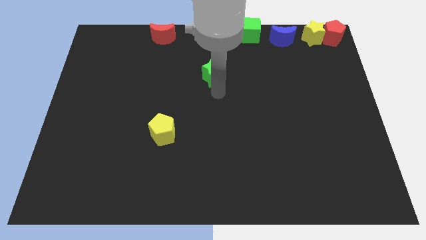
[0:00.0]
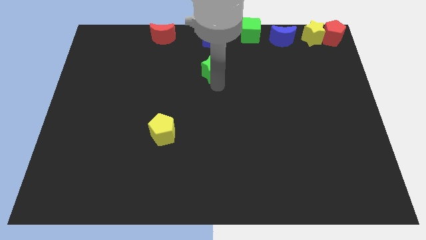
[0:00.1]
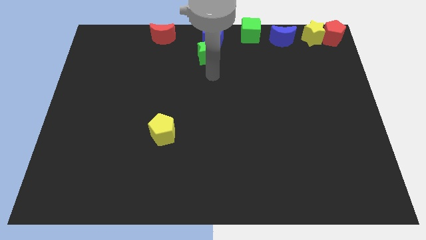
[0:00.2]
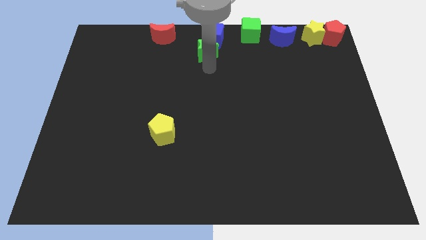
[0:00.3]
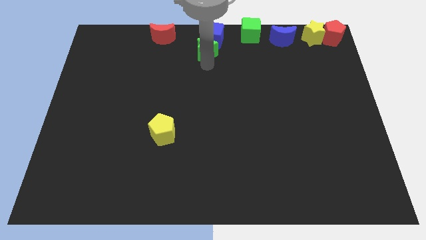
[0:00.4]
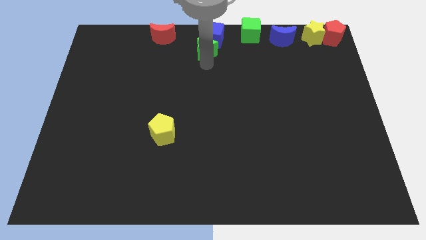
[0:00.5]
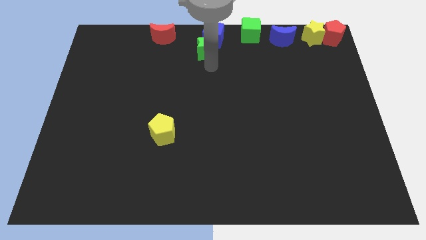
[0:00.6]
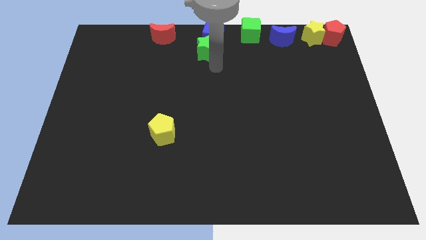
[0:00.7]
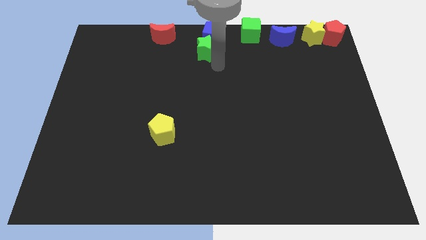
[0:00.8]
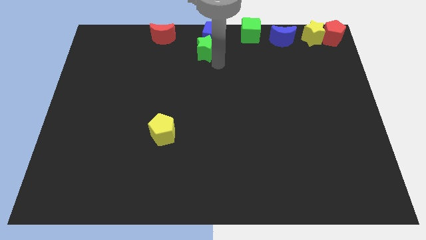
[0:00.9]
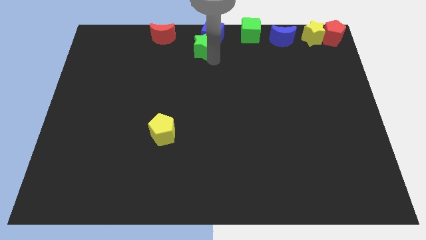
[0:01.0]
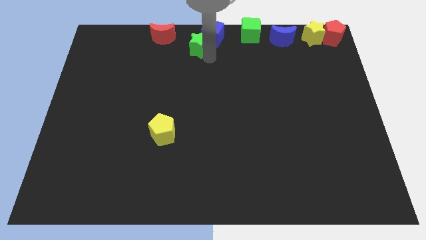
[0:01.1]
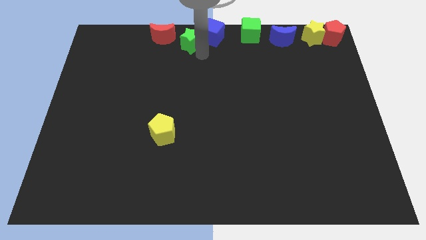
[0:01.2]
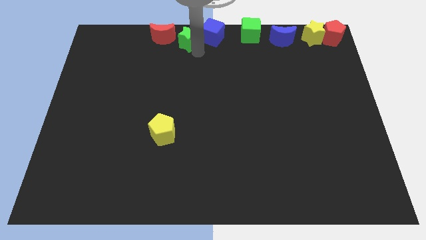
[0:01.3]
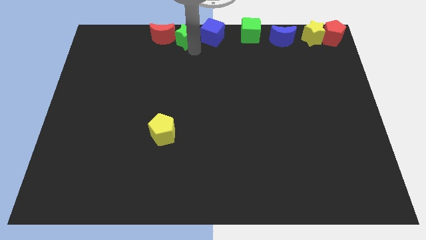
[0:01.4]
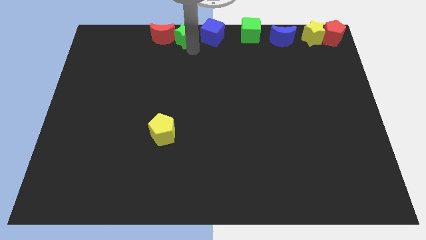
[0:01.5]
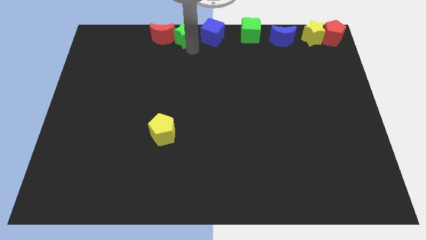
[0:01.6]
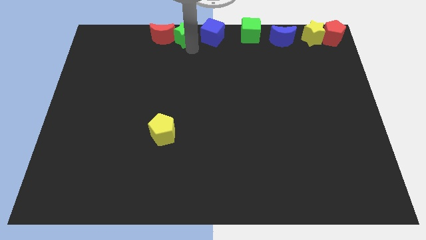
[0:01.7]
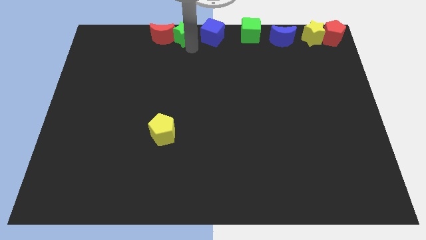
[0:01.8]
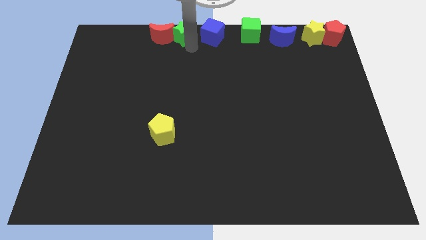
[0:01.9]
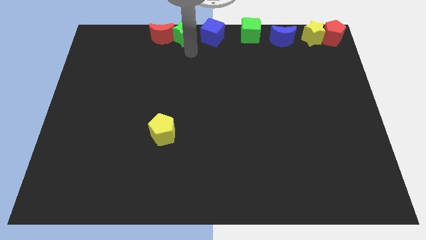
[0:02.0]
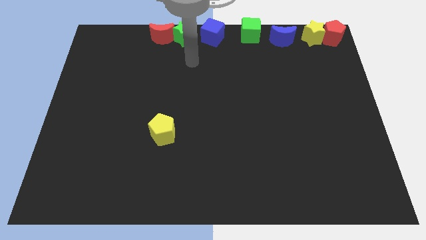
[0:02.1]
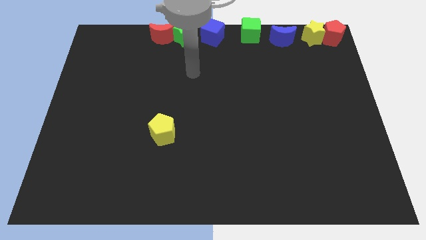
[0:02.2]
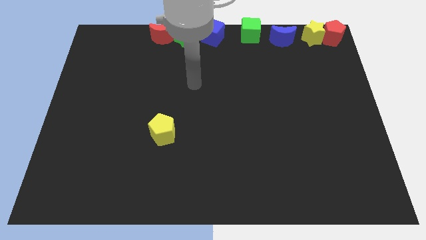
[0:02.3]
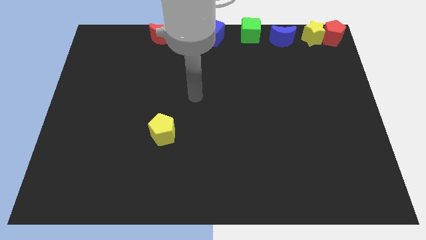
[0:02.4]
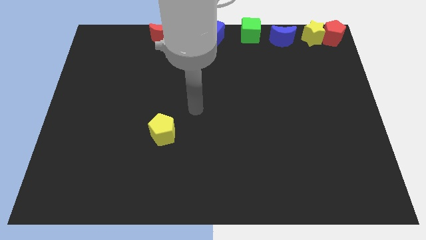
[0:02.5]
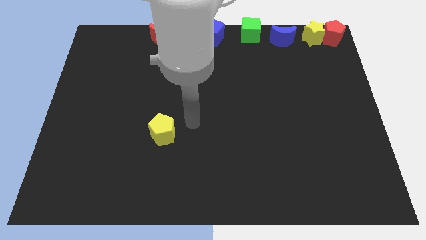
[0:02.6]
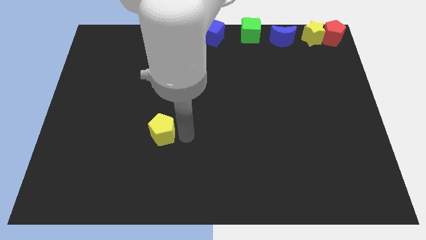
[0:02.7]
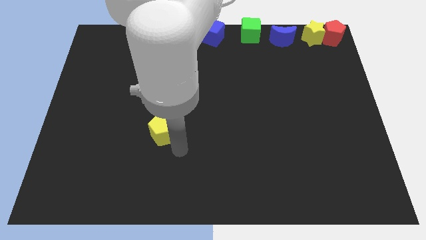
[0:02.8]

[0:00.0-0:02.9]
place the green star between red moon and blue cube

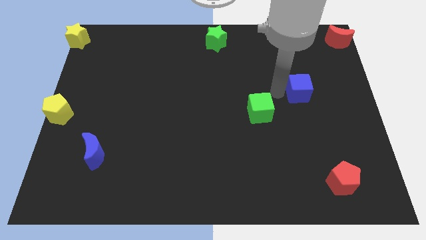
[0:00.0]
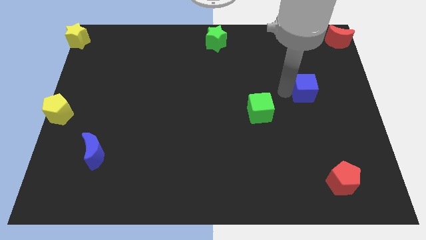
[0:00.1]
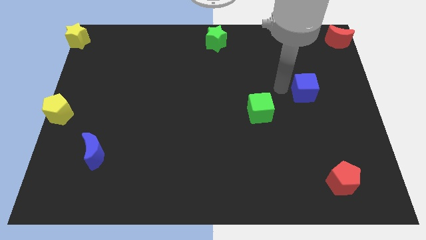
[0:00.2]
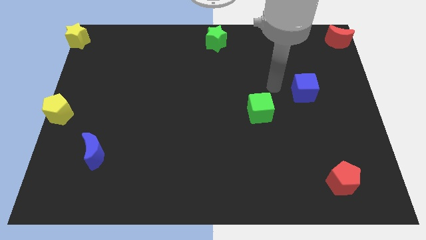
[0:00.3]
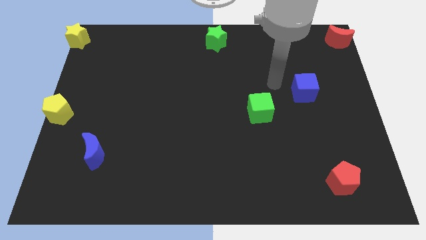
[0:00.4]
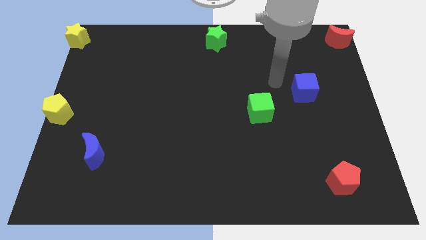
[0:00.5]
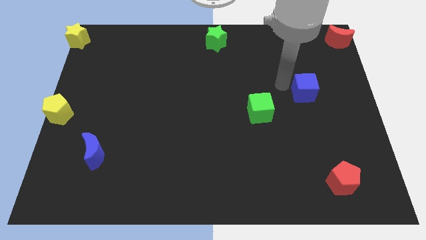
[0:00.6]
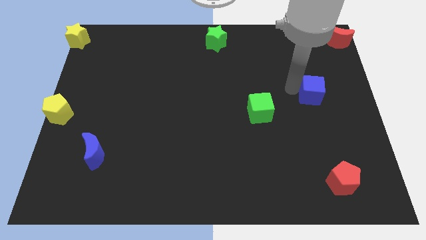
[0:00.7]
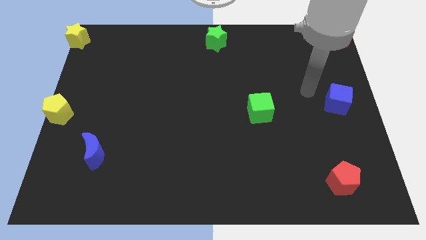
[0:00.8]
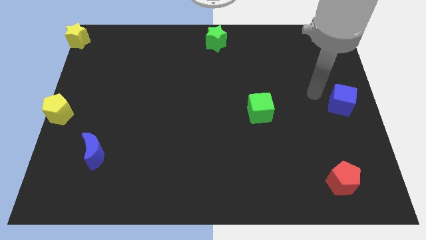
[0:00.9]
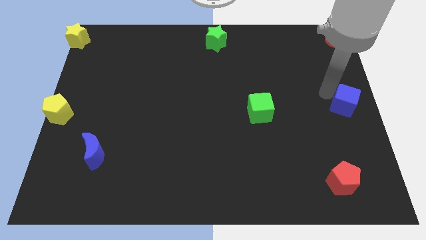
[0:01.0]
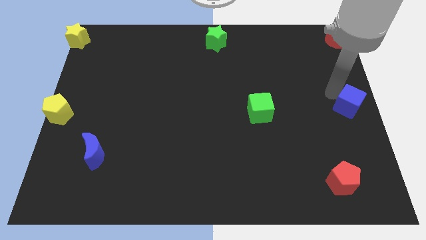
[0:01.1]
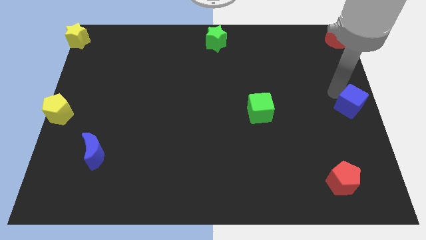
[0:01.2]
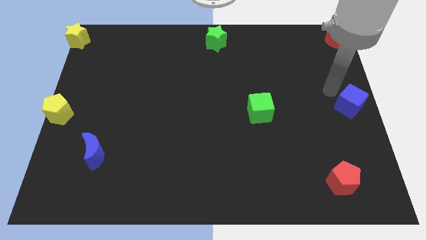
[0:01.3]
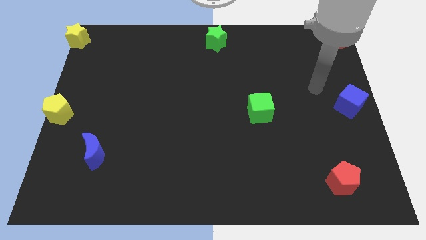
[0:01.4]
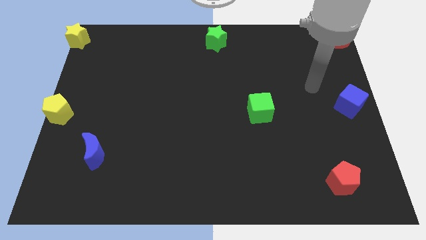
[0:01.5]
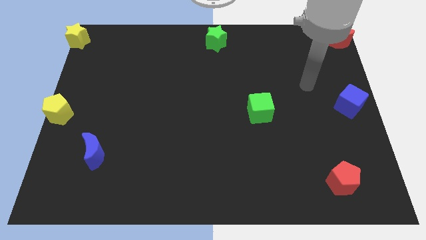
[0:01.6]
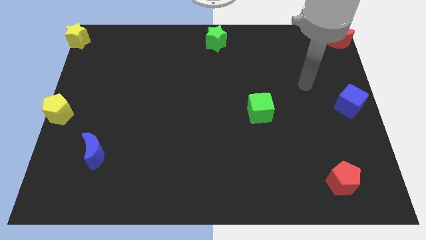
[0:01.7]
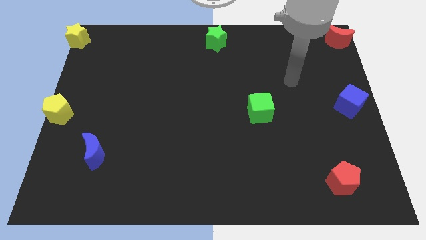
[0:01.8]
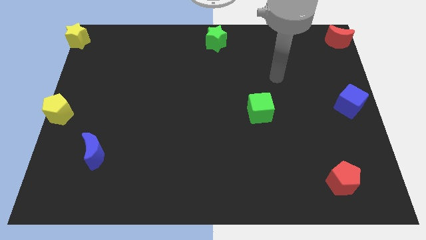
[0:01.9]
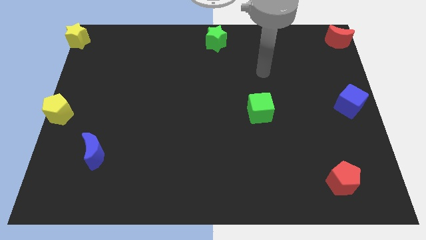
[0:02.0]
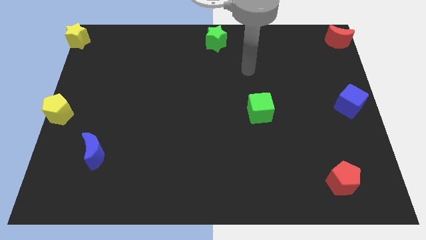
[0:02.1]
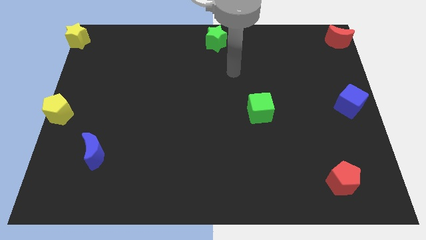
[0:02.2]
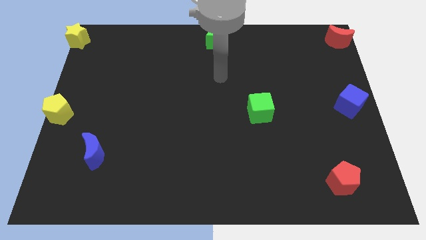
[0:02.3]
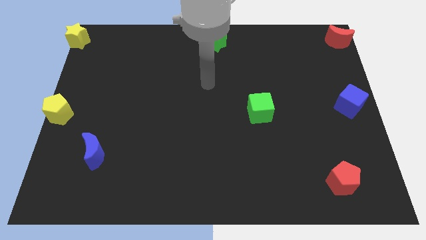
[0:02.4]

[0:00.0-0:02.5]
move the blue cube to the centre right of the board

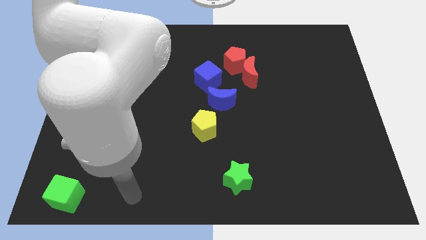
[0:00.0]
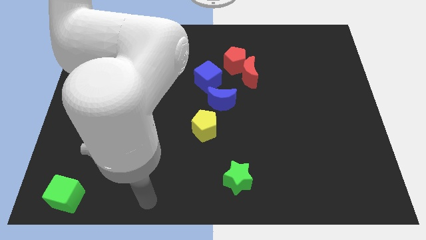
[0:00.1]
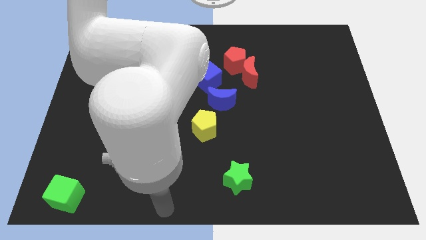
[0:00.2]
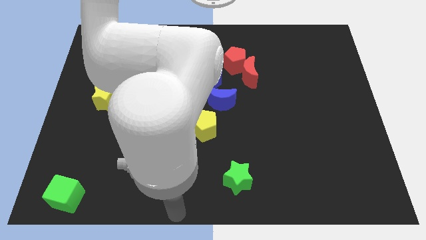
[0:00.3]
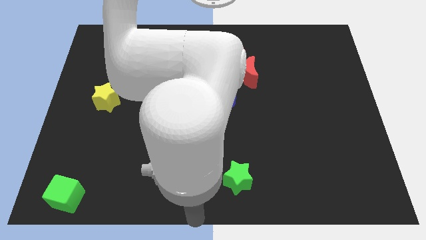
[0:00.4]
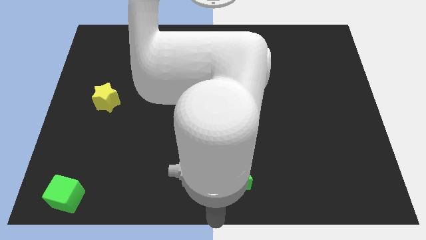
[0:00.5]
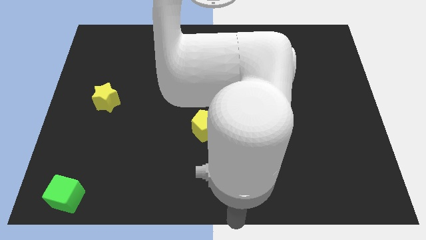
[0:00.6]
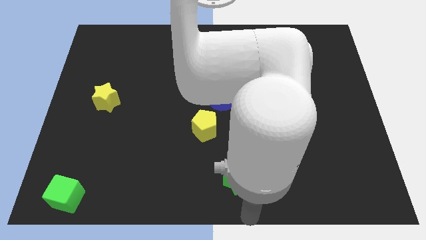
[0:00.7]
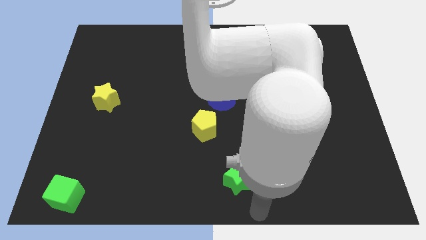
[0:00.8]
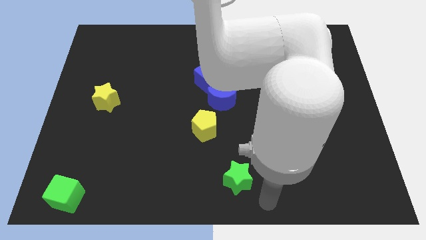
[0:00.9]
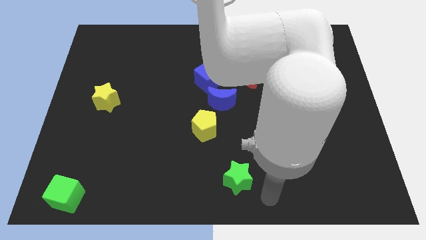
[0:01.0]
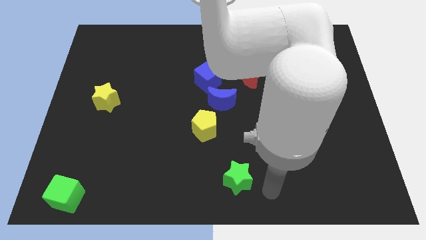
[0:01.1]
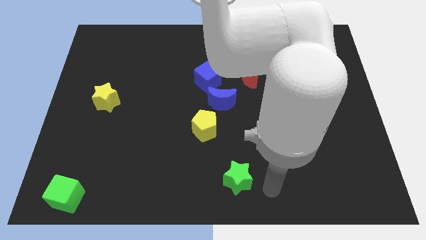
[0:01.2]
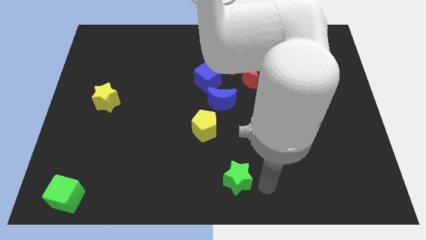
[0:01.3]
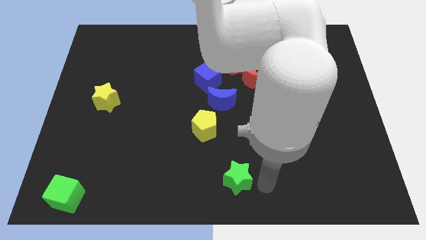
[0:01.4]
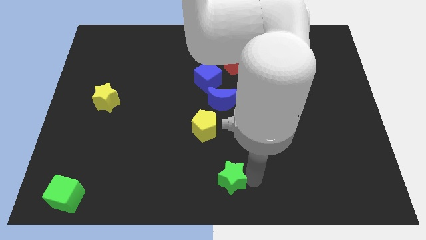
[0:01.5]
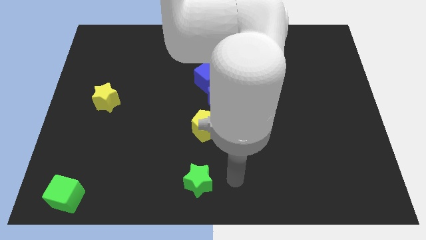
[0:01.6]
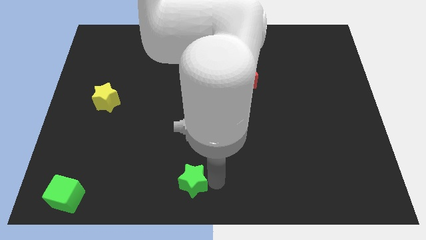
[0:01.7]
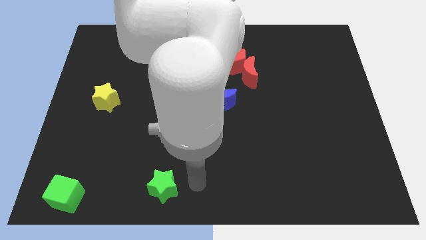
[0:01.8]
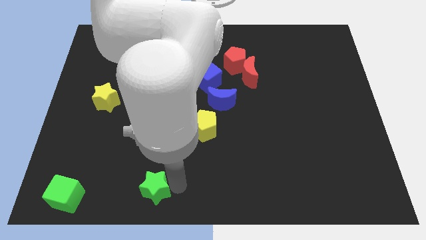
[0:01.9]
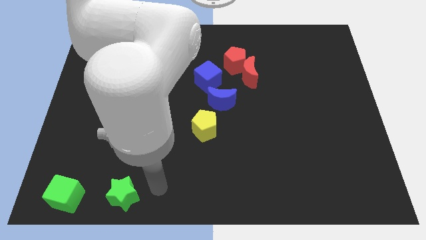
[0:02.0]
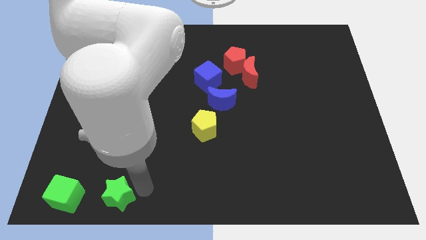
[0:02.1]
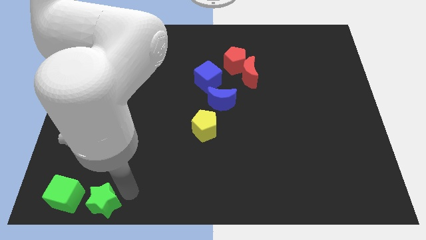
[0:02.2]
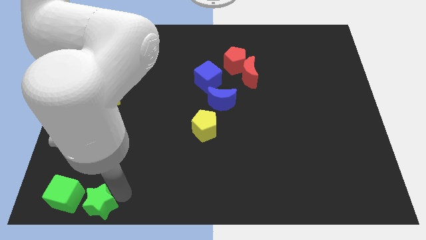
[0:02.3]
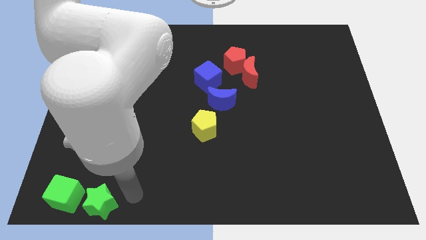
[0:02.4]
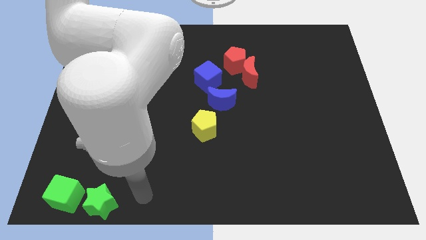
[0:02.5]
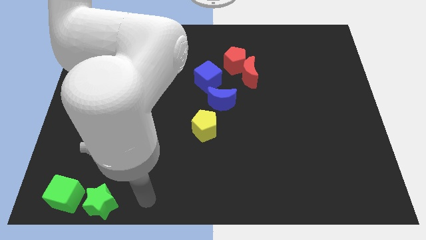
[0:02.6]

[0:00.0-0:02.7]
place the green star right to the green cube

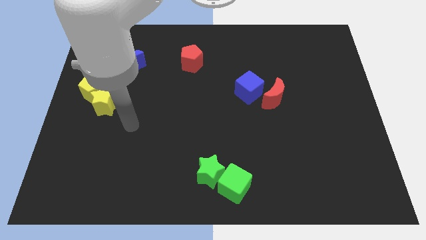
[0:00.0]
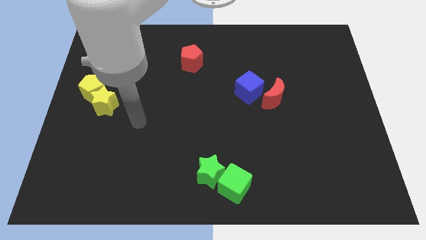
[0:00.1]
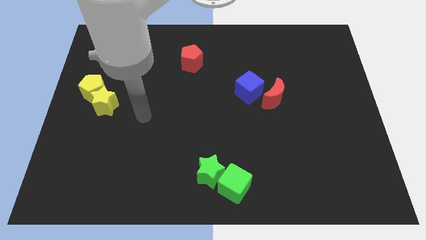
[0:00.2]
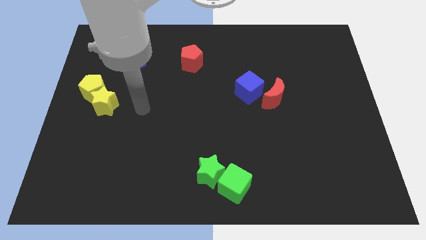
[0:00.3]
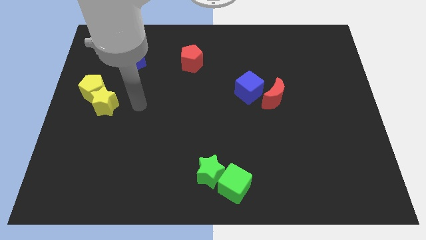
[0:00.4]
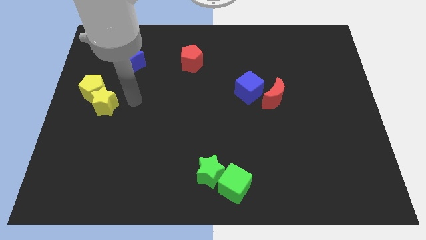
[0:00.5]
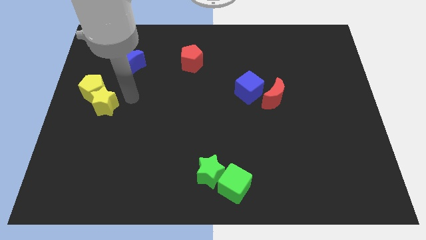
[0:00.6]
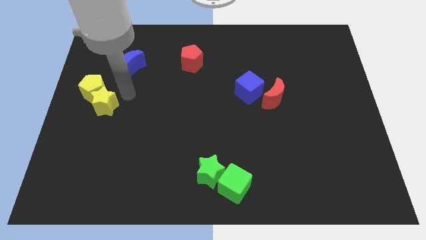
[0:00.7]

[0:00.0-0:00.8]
move the arm below the blue crescent
